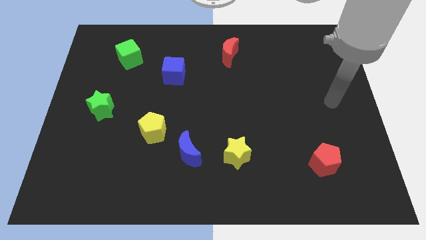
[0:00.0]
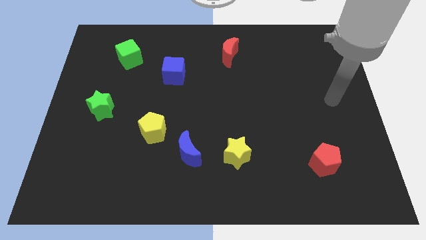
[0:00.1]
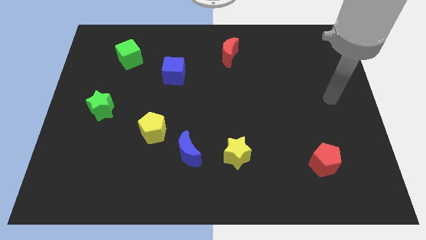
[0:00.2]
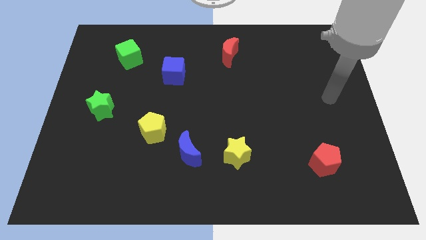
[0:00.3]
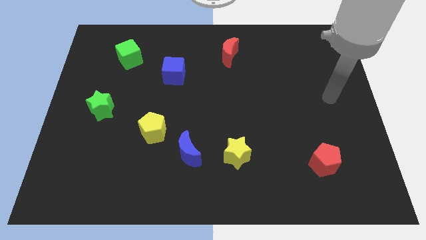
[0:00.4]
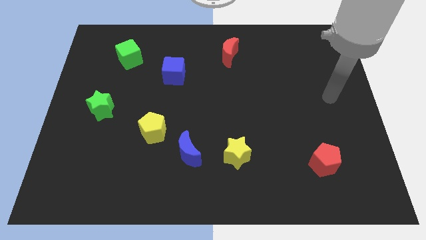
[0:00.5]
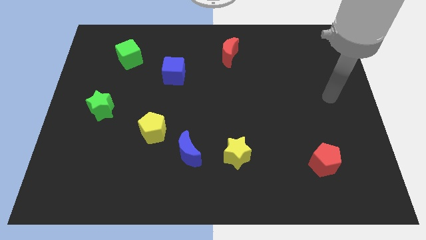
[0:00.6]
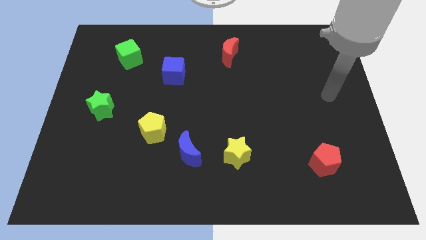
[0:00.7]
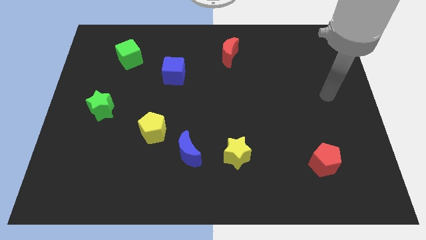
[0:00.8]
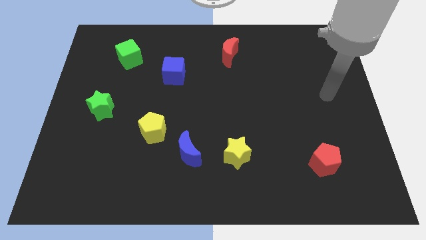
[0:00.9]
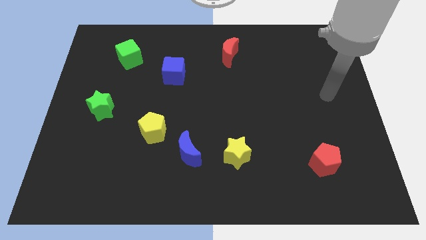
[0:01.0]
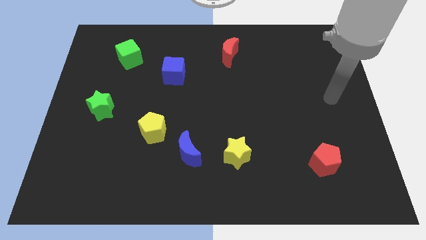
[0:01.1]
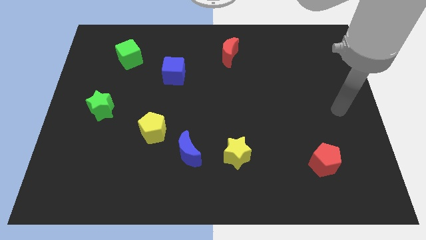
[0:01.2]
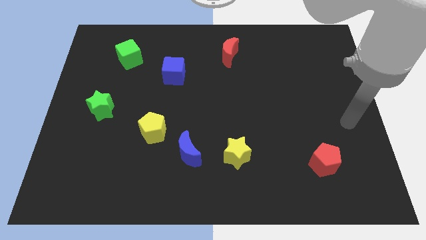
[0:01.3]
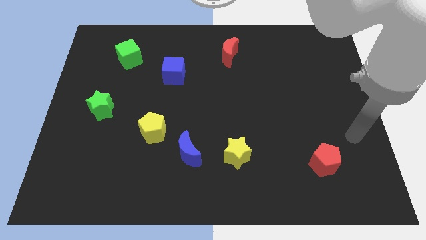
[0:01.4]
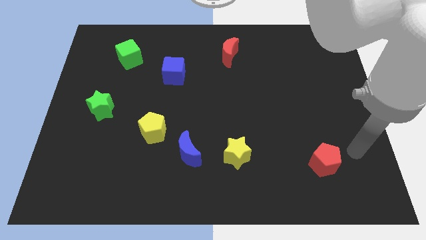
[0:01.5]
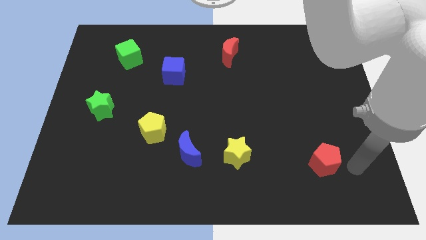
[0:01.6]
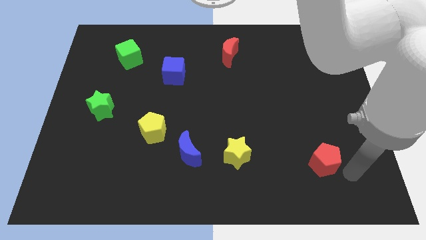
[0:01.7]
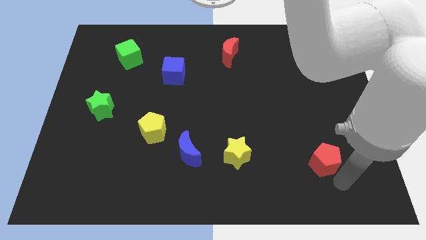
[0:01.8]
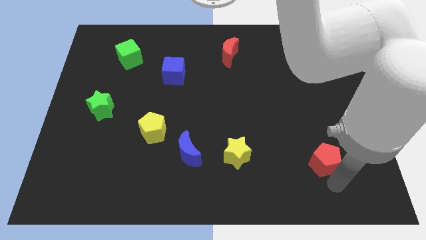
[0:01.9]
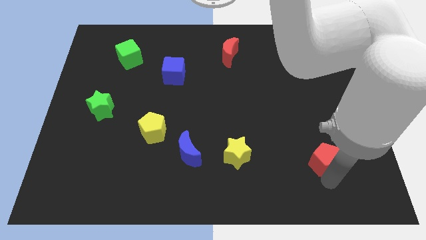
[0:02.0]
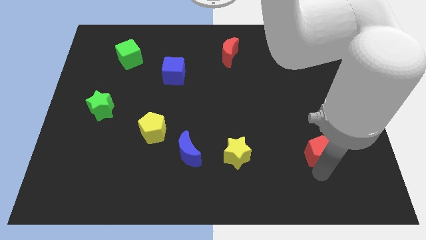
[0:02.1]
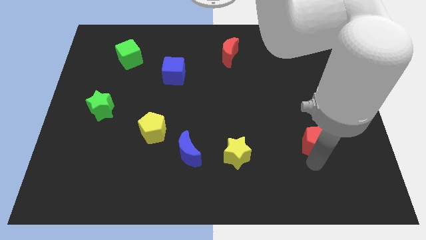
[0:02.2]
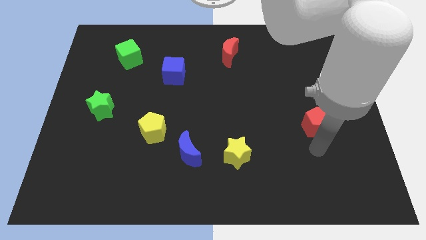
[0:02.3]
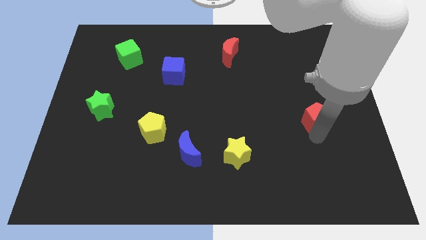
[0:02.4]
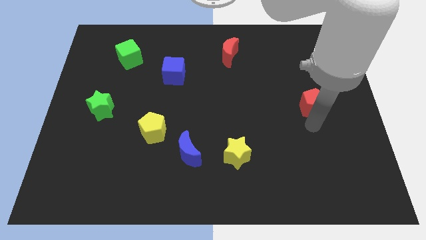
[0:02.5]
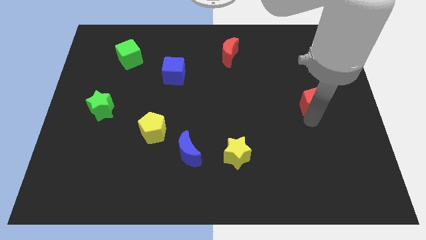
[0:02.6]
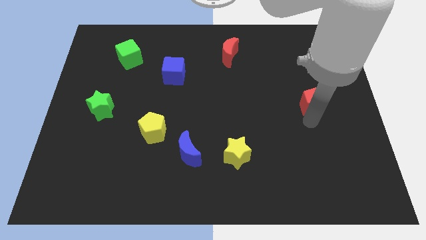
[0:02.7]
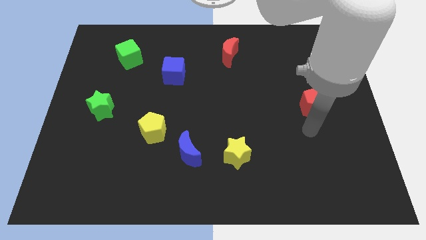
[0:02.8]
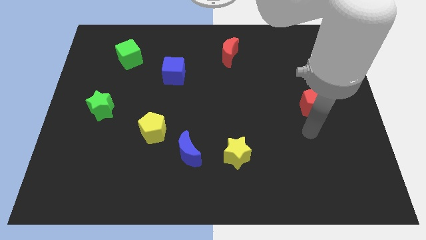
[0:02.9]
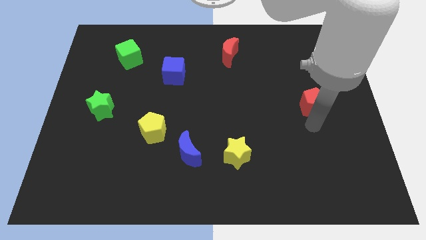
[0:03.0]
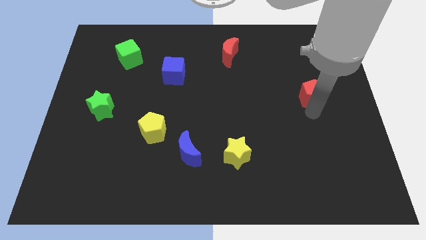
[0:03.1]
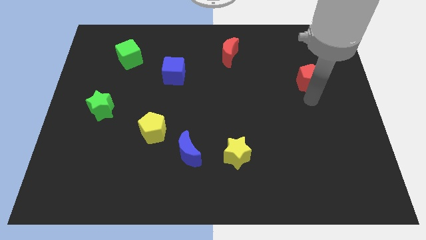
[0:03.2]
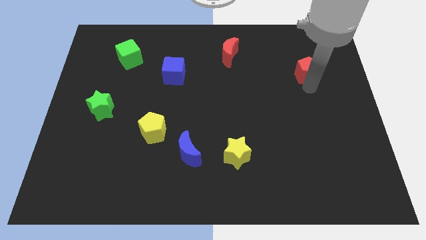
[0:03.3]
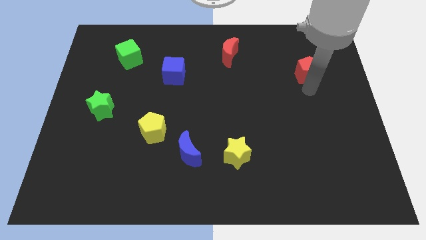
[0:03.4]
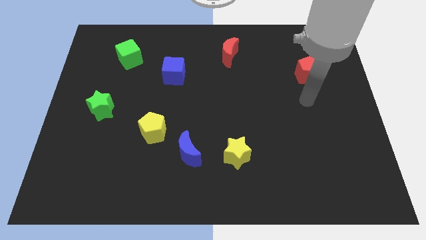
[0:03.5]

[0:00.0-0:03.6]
push the red pentagon towards the top right side of the board

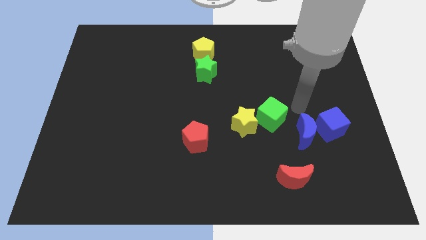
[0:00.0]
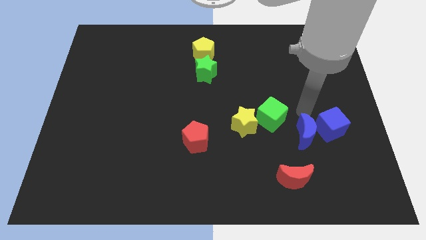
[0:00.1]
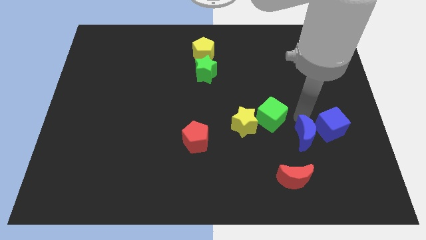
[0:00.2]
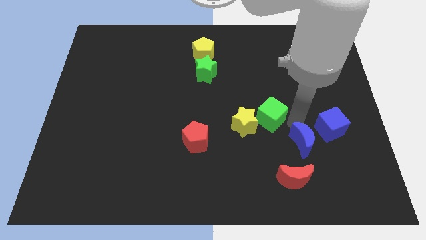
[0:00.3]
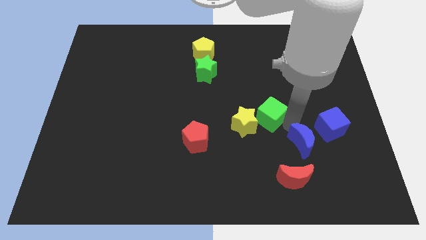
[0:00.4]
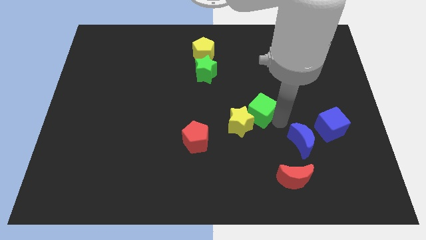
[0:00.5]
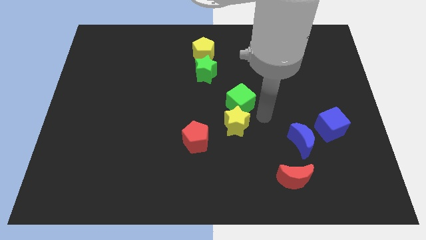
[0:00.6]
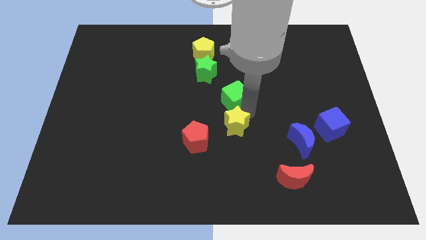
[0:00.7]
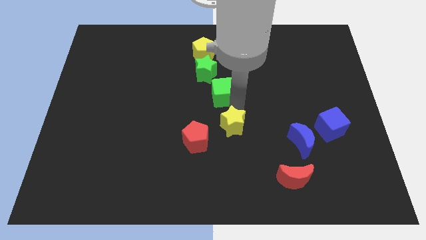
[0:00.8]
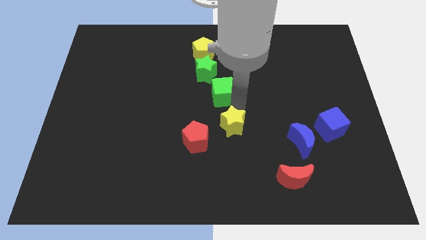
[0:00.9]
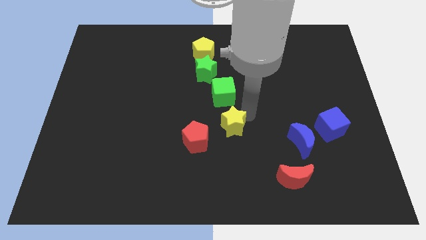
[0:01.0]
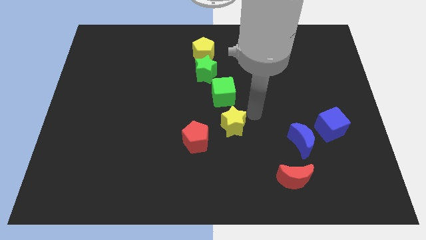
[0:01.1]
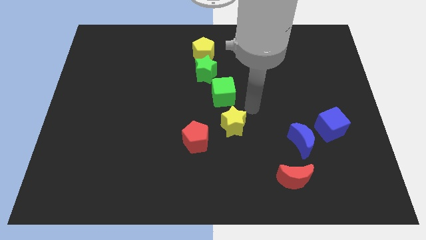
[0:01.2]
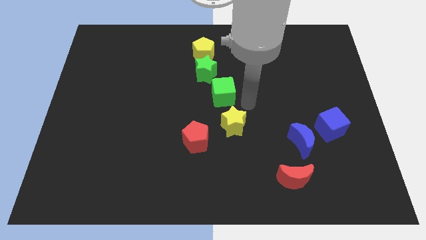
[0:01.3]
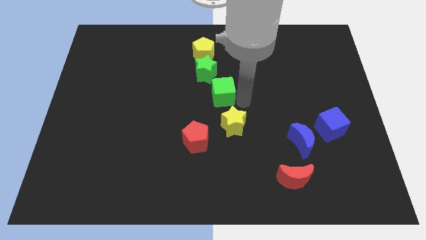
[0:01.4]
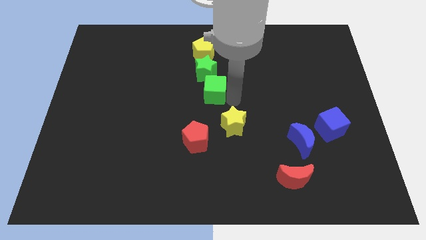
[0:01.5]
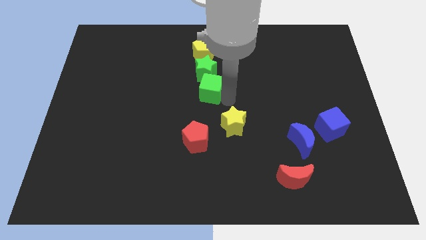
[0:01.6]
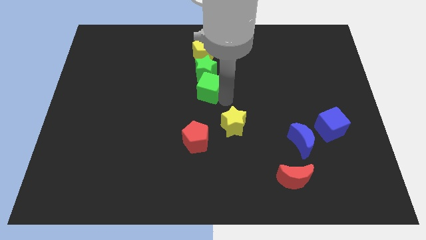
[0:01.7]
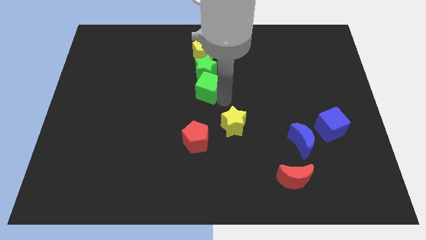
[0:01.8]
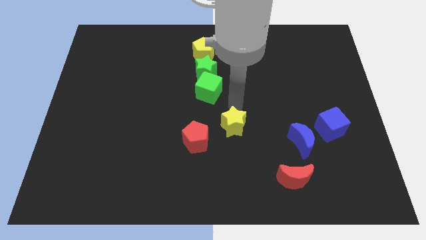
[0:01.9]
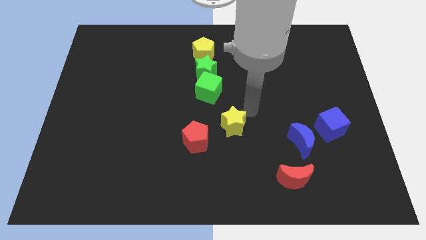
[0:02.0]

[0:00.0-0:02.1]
separate the green cube towards bottom of green star

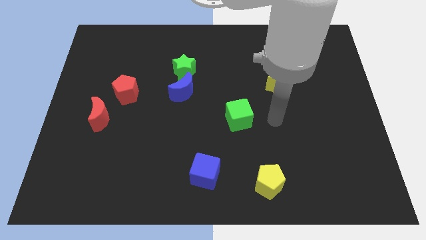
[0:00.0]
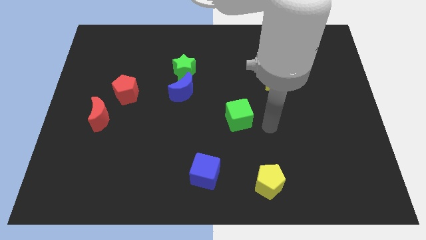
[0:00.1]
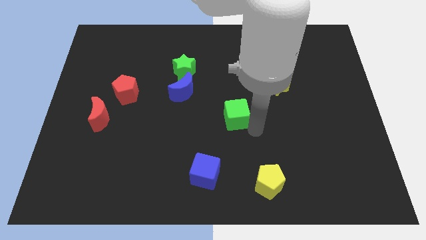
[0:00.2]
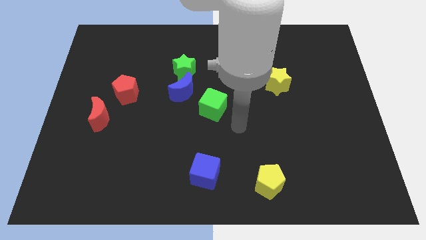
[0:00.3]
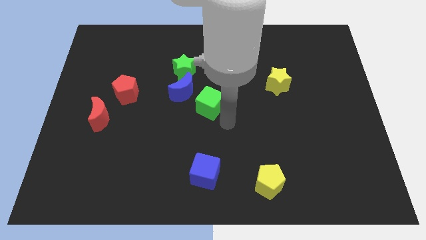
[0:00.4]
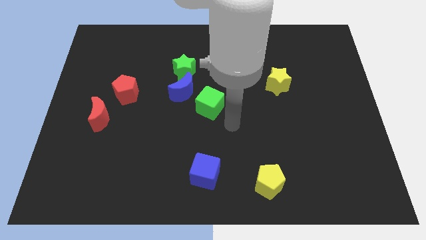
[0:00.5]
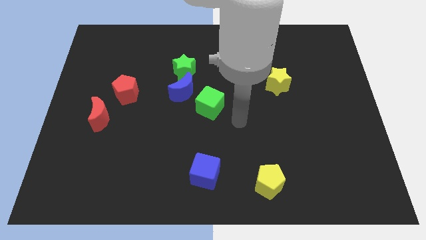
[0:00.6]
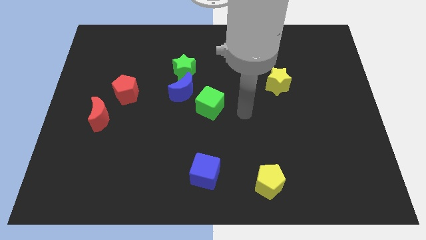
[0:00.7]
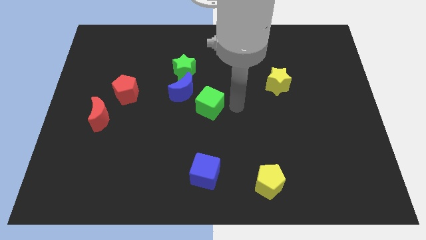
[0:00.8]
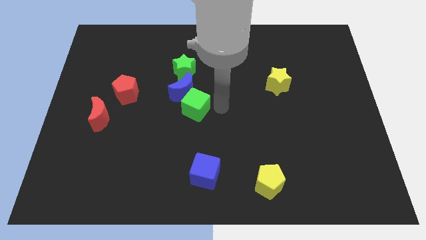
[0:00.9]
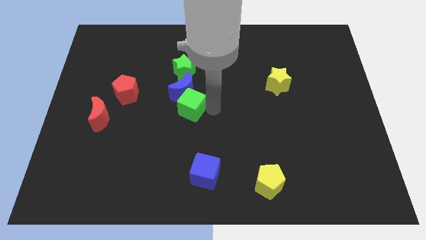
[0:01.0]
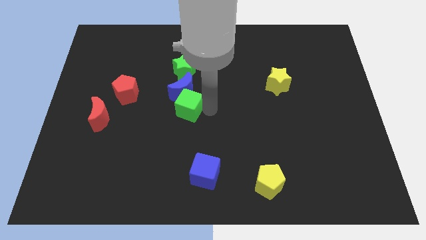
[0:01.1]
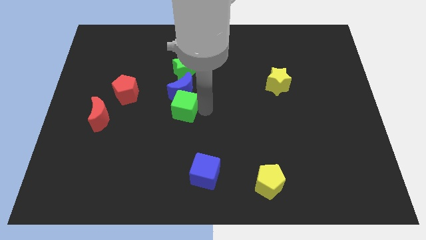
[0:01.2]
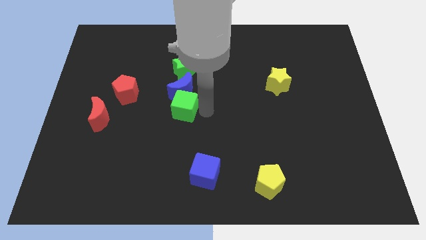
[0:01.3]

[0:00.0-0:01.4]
push the green cube to the bottom of the blue crescent

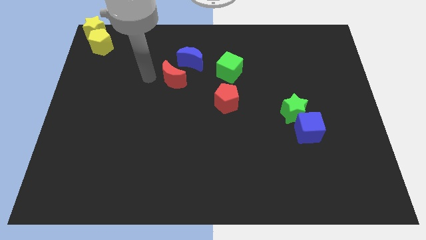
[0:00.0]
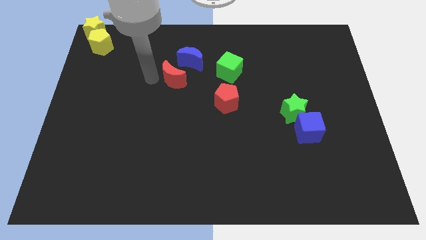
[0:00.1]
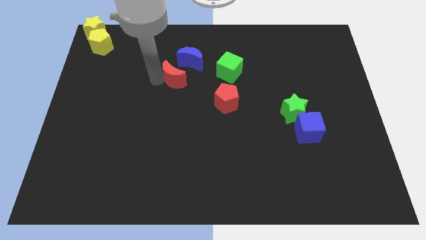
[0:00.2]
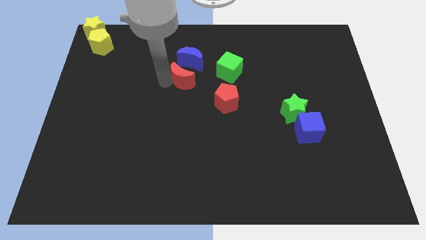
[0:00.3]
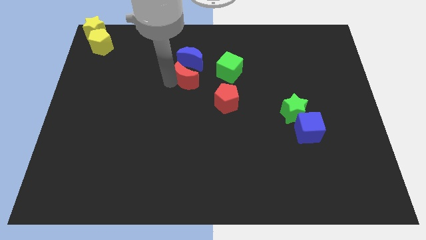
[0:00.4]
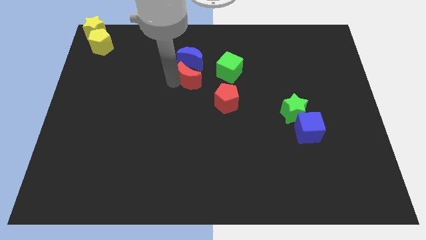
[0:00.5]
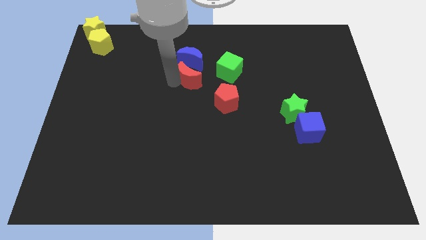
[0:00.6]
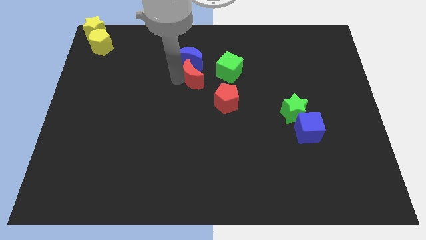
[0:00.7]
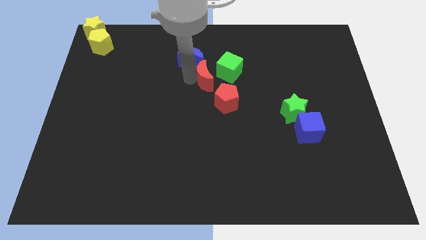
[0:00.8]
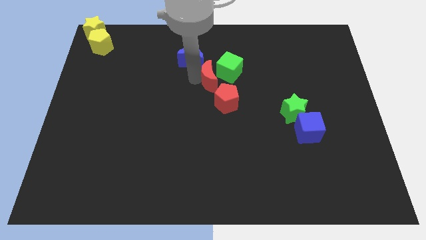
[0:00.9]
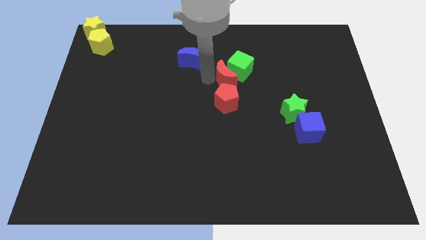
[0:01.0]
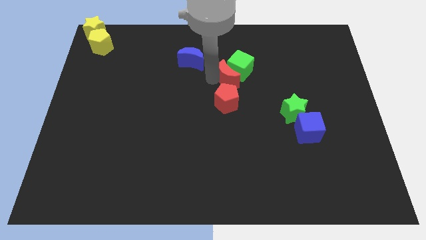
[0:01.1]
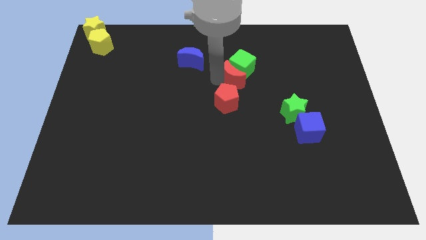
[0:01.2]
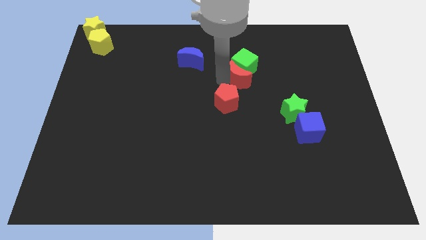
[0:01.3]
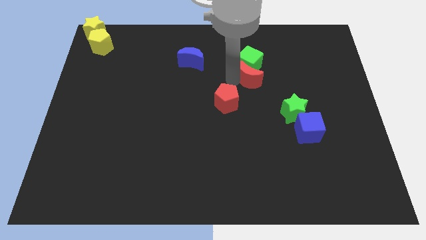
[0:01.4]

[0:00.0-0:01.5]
push the red moon into the green cube

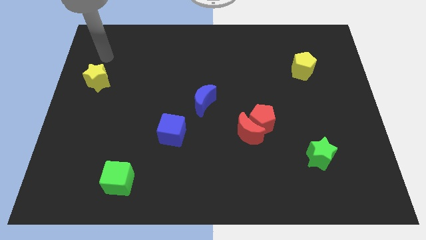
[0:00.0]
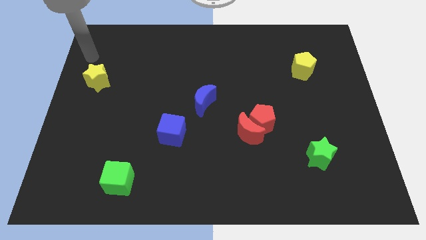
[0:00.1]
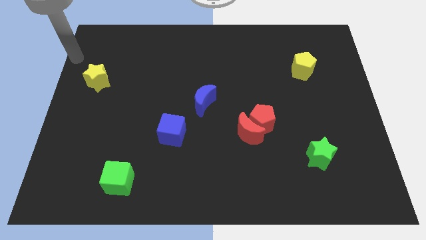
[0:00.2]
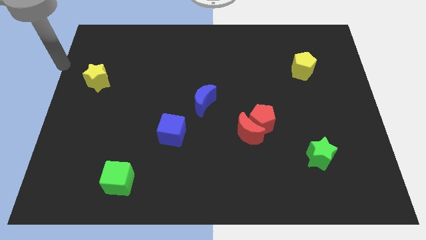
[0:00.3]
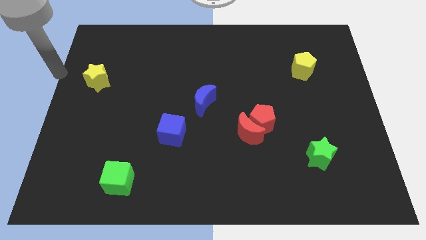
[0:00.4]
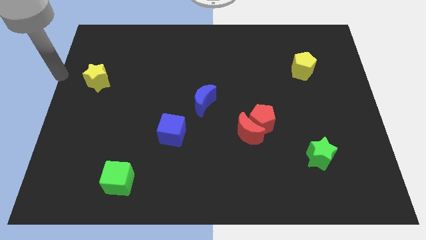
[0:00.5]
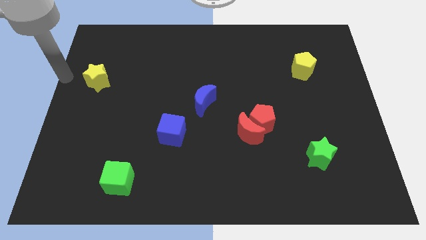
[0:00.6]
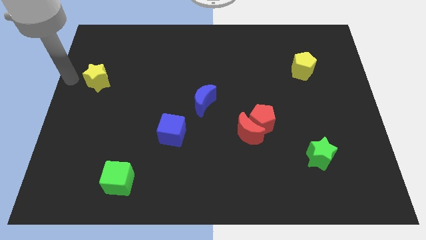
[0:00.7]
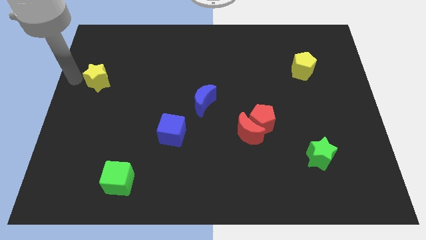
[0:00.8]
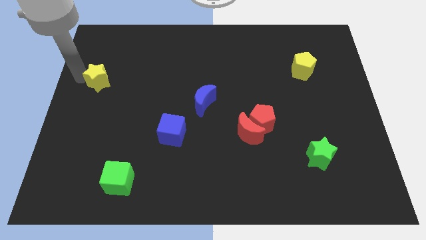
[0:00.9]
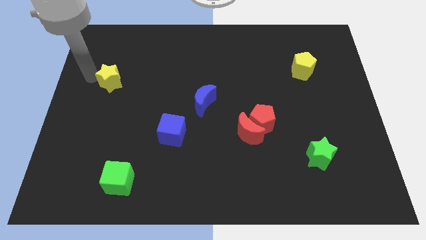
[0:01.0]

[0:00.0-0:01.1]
move your arm to the left of the yellow star
